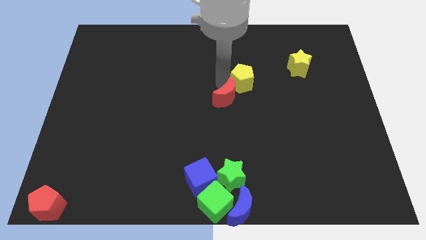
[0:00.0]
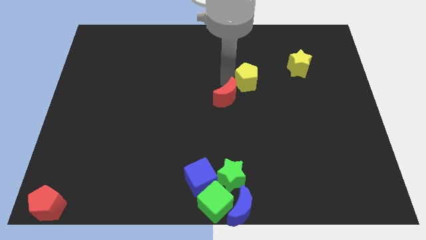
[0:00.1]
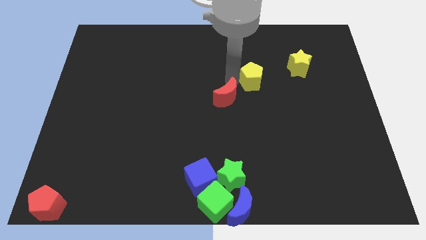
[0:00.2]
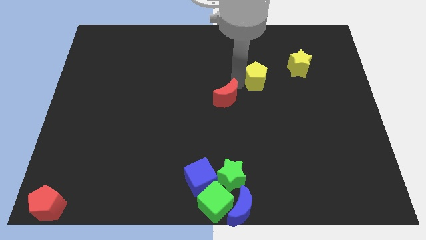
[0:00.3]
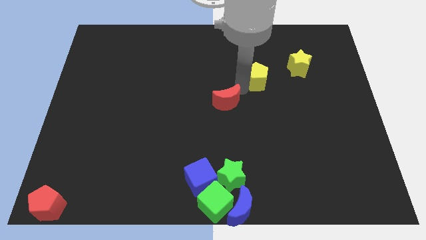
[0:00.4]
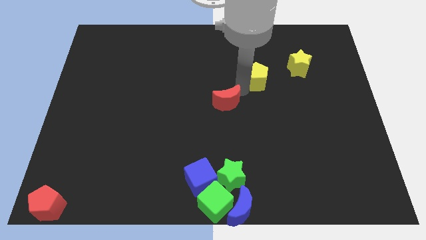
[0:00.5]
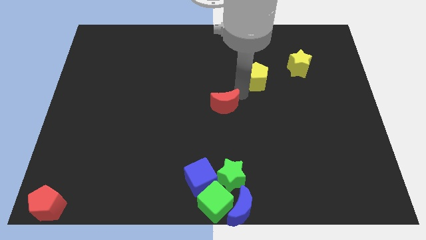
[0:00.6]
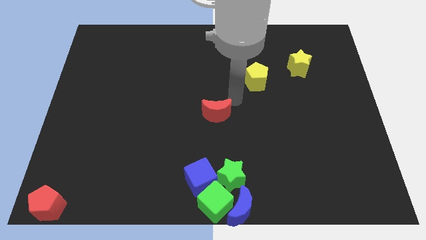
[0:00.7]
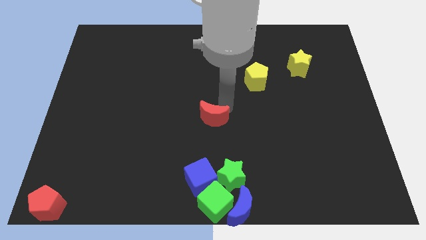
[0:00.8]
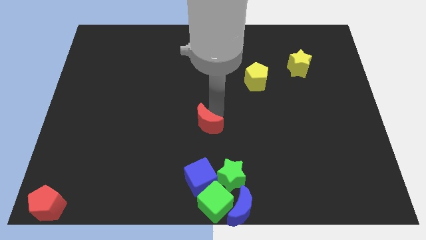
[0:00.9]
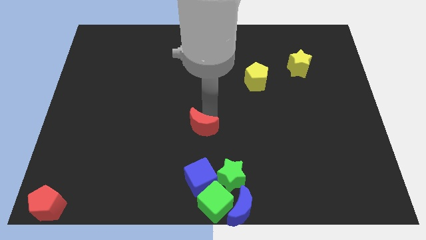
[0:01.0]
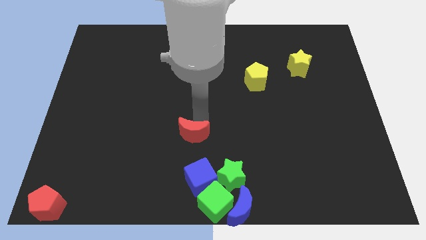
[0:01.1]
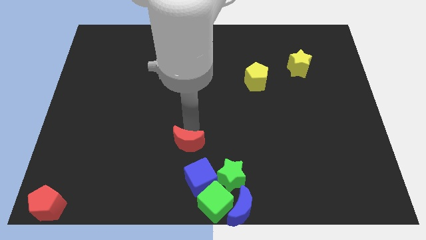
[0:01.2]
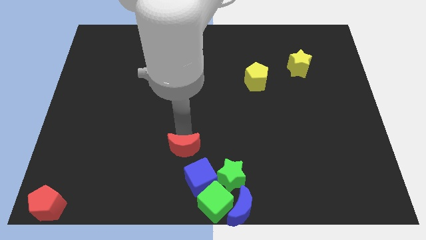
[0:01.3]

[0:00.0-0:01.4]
separate the red crescent and the yellow pentagon from each other

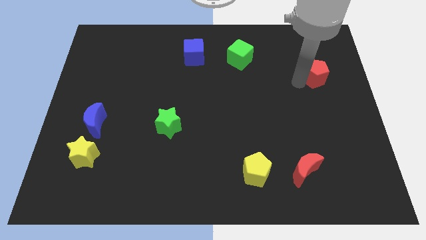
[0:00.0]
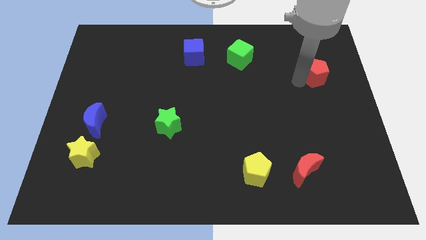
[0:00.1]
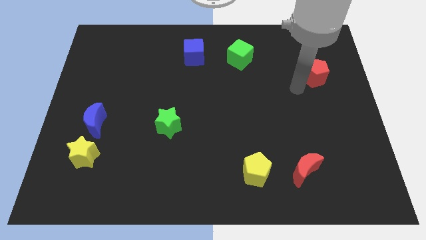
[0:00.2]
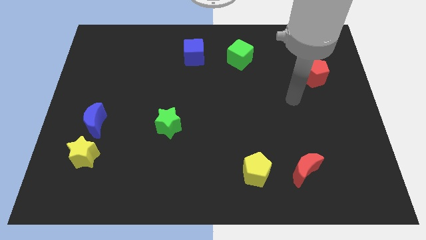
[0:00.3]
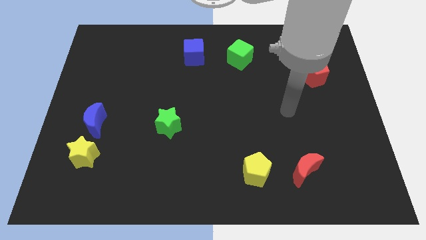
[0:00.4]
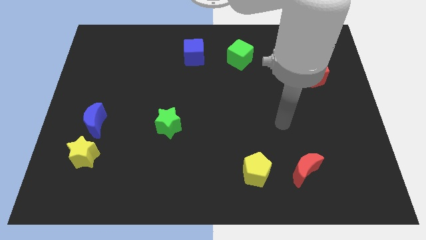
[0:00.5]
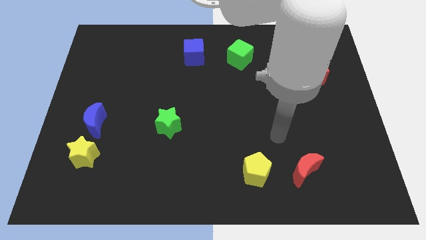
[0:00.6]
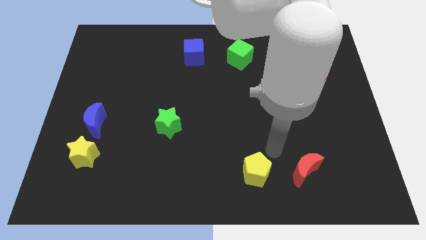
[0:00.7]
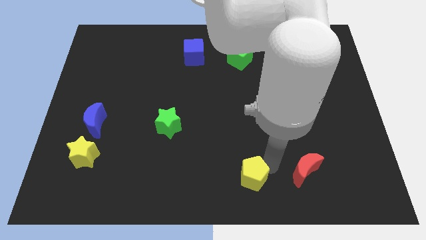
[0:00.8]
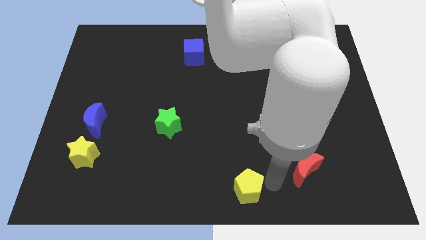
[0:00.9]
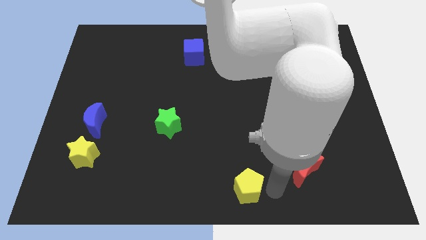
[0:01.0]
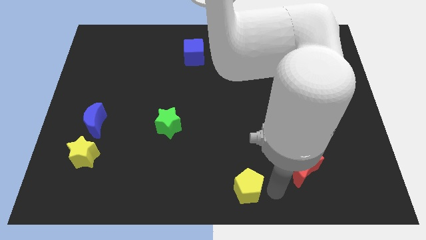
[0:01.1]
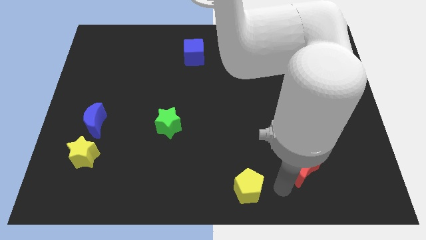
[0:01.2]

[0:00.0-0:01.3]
push the yellow pentagon slightly to the bottom of the board

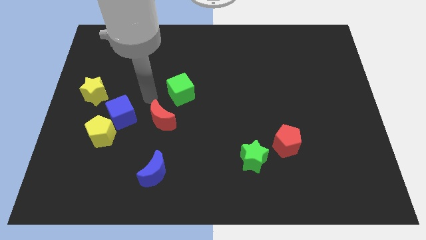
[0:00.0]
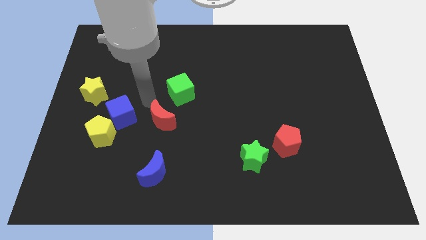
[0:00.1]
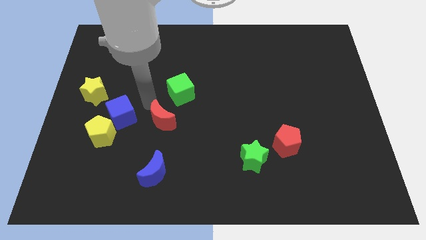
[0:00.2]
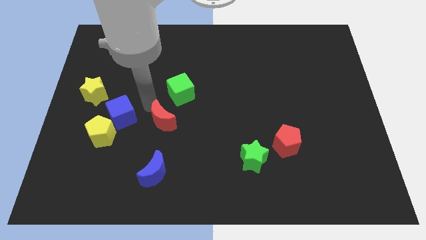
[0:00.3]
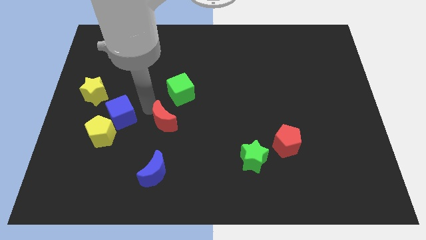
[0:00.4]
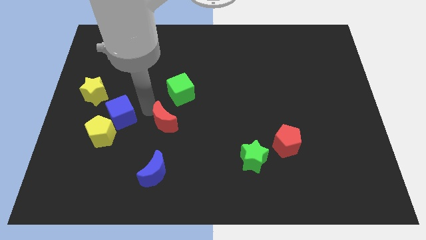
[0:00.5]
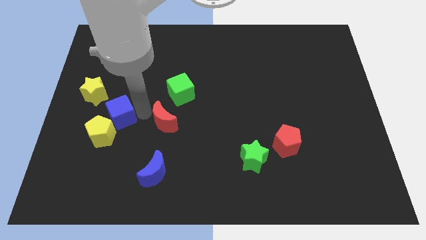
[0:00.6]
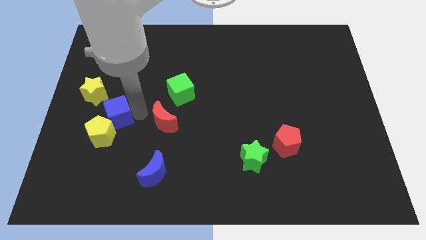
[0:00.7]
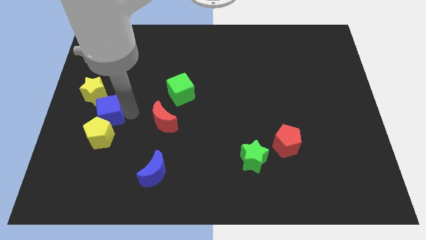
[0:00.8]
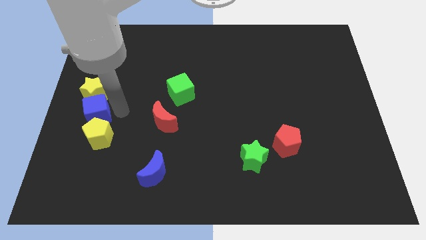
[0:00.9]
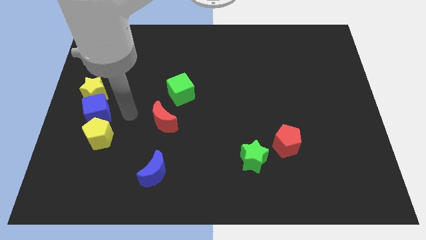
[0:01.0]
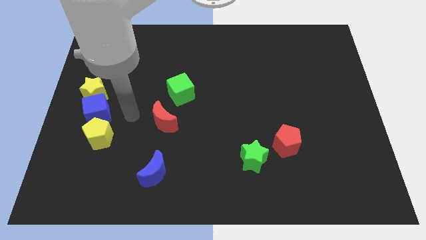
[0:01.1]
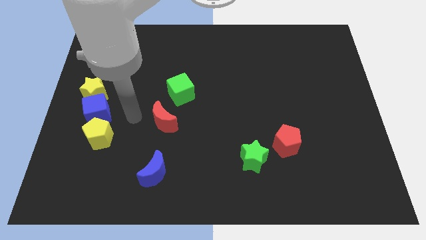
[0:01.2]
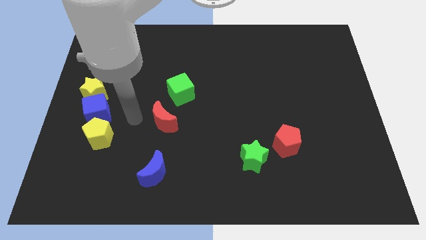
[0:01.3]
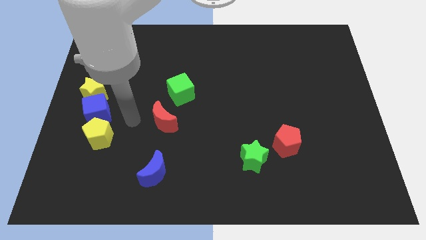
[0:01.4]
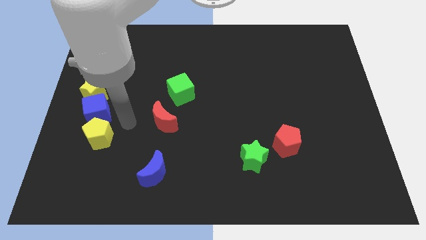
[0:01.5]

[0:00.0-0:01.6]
move the blue cube diagonally in between both the yellow blocks

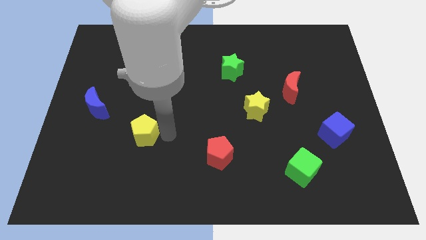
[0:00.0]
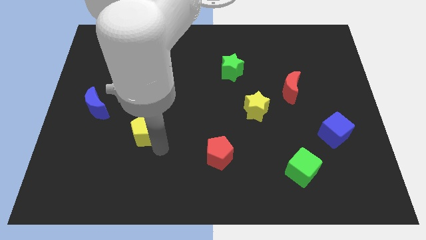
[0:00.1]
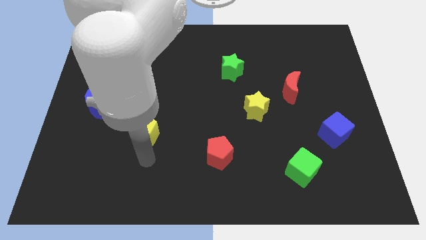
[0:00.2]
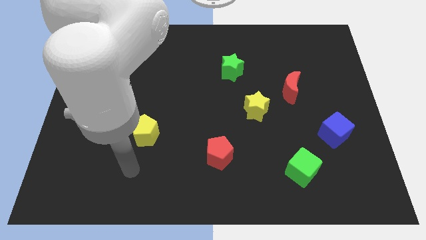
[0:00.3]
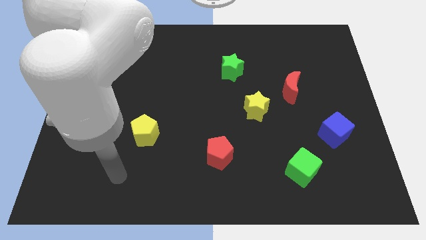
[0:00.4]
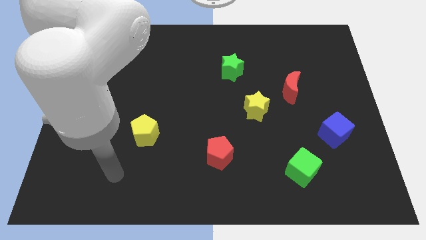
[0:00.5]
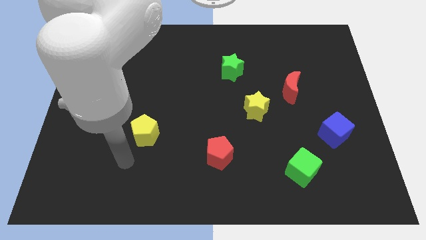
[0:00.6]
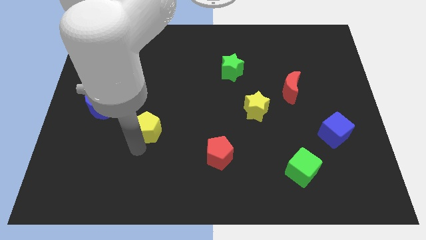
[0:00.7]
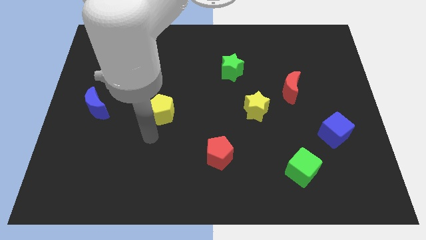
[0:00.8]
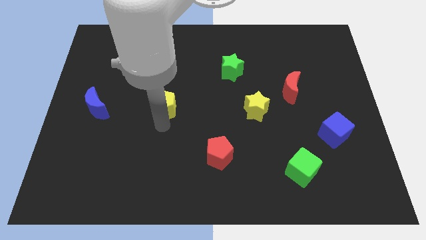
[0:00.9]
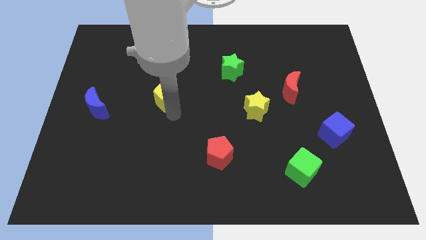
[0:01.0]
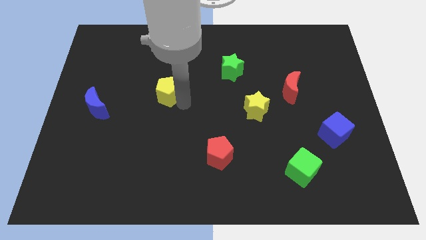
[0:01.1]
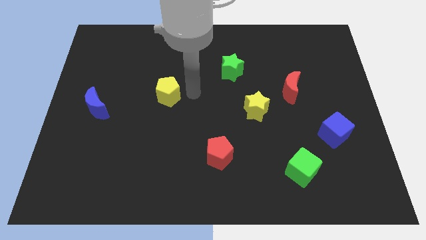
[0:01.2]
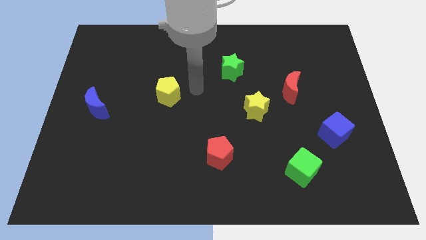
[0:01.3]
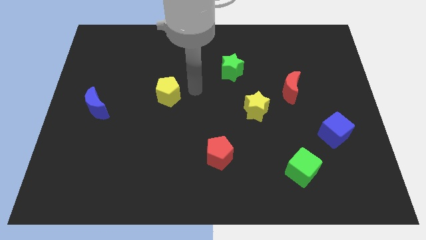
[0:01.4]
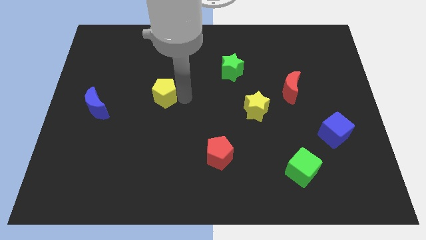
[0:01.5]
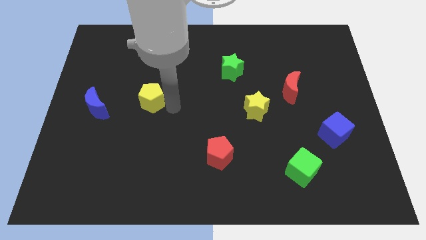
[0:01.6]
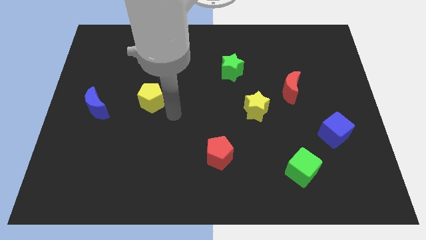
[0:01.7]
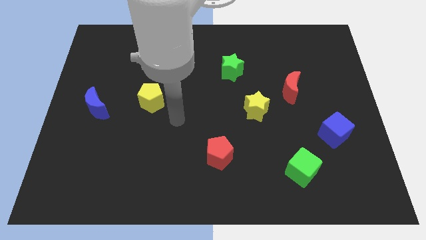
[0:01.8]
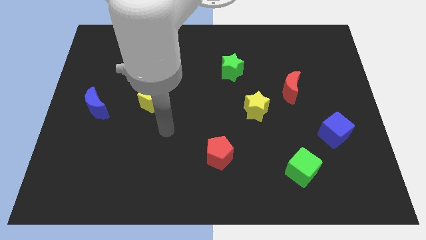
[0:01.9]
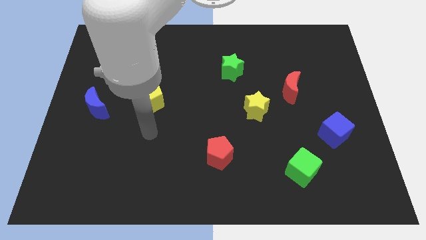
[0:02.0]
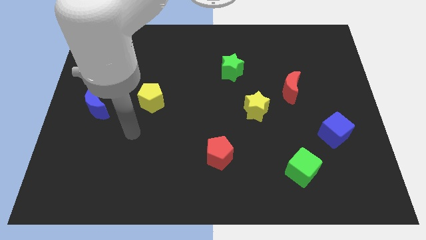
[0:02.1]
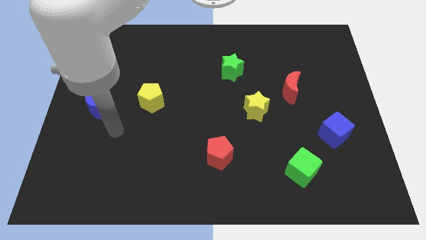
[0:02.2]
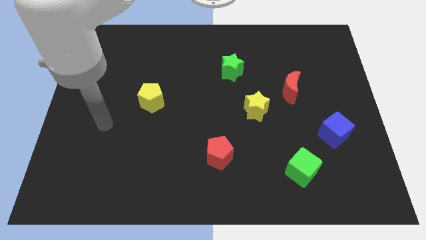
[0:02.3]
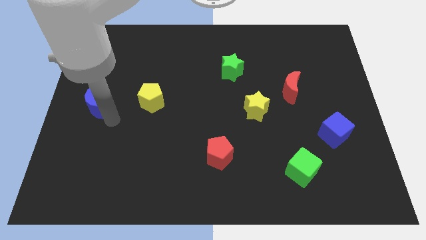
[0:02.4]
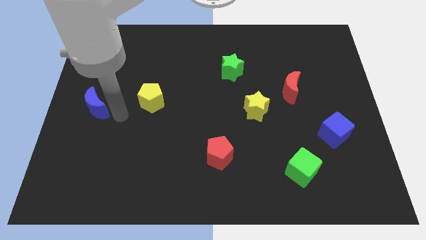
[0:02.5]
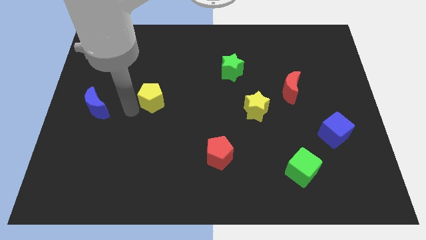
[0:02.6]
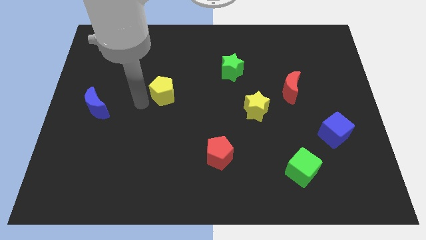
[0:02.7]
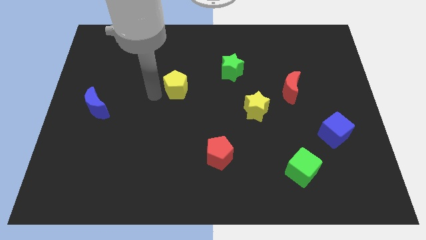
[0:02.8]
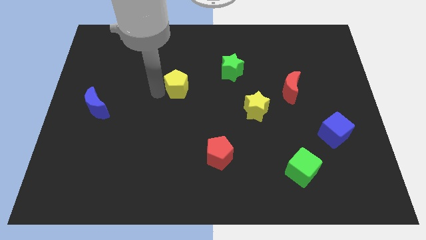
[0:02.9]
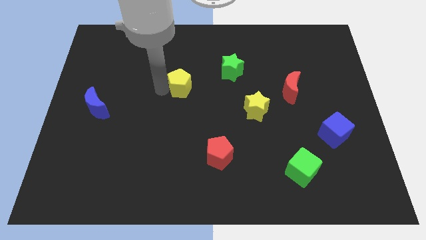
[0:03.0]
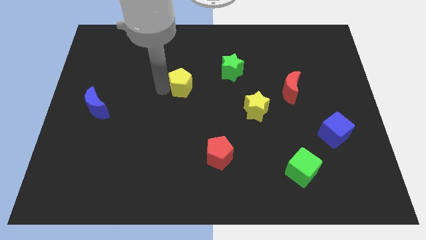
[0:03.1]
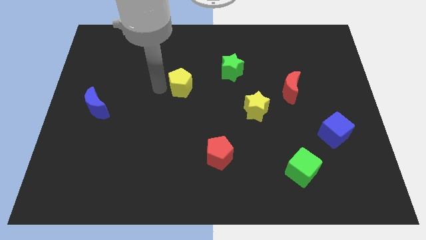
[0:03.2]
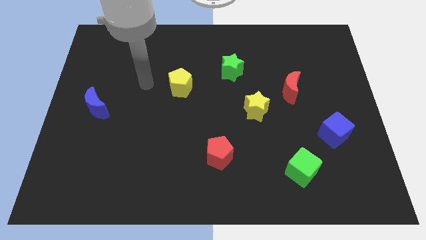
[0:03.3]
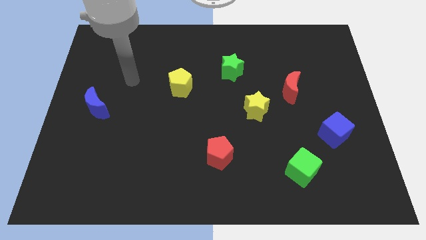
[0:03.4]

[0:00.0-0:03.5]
move the yellow pentagon between blue moon and green star

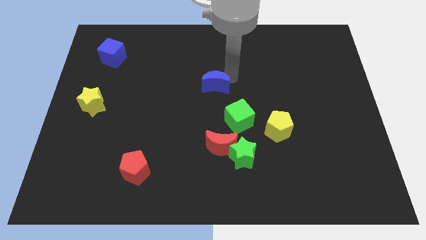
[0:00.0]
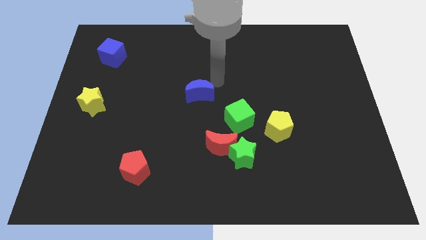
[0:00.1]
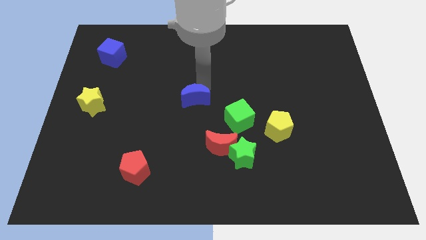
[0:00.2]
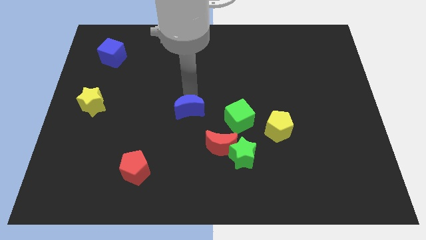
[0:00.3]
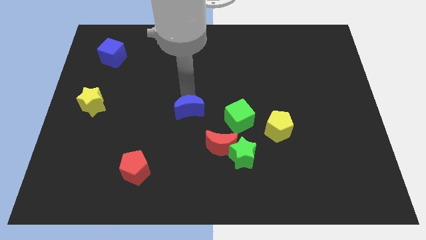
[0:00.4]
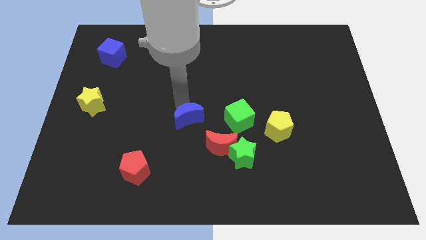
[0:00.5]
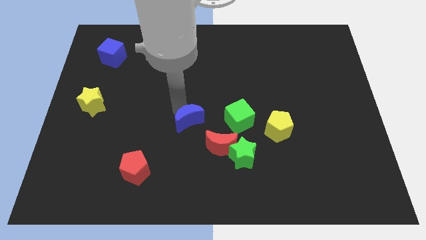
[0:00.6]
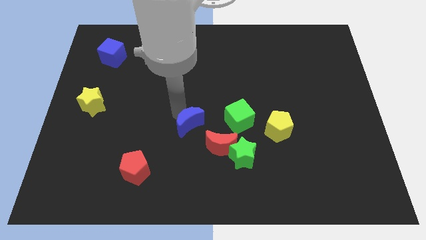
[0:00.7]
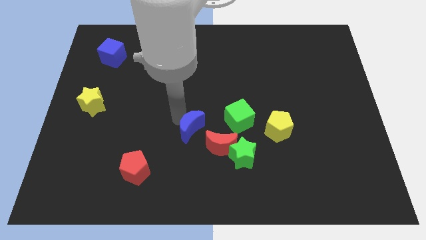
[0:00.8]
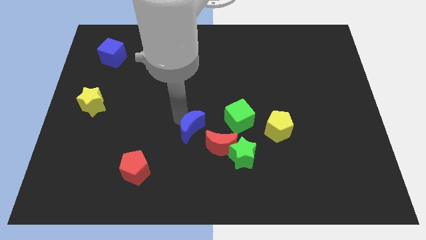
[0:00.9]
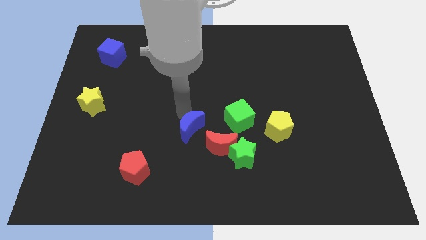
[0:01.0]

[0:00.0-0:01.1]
move blue crescent to the left of green cube

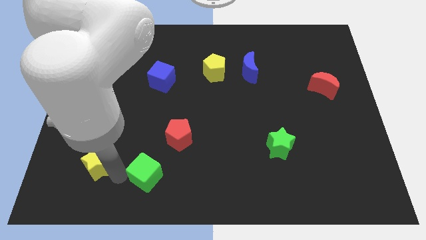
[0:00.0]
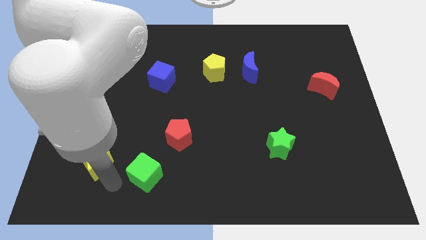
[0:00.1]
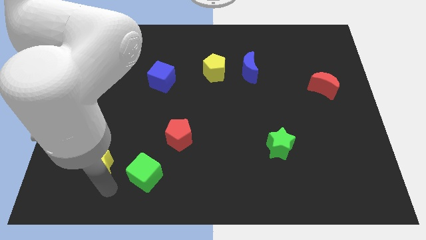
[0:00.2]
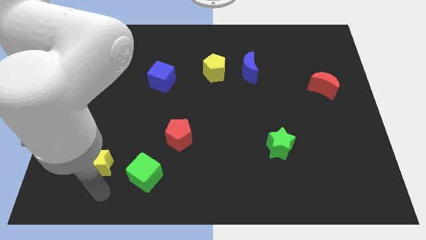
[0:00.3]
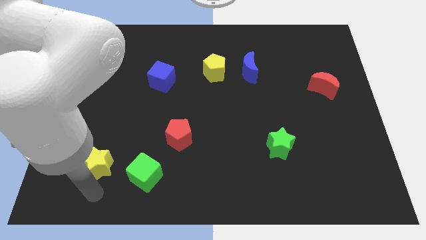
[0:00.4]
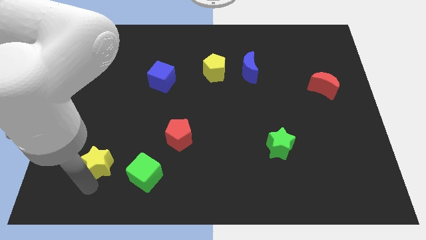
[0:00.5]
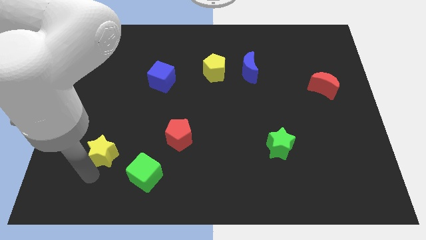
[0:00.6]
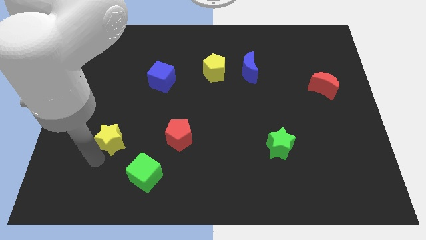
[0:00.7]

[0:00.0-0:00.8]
place the yellow star diagonally at the top left of the green cube
